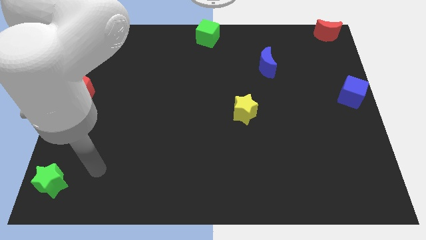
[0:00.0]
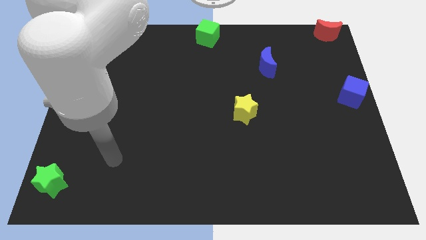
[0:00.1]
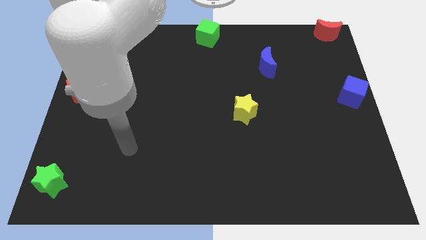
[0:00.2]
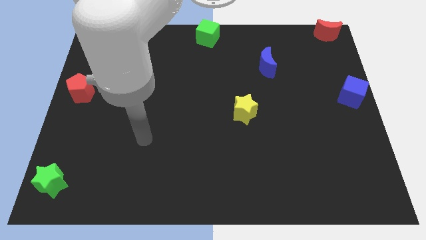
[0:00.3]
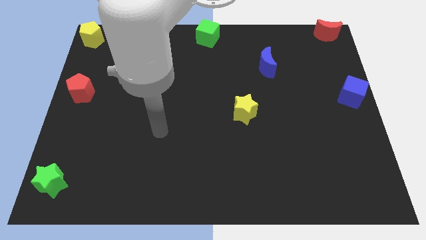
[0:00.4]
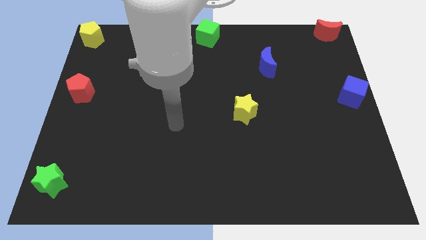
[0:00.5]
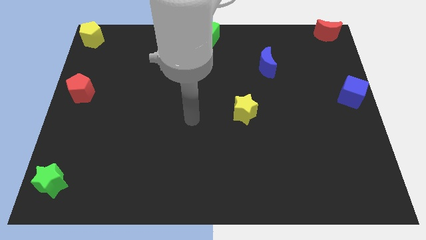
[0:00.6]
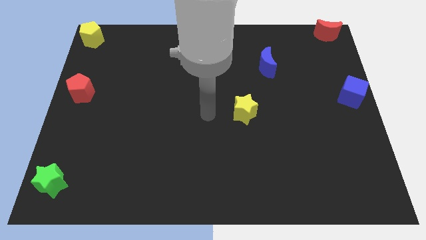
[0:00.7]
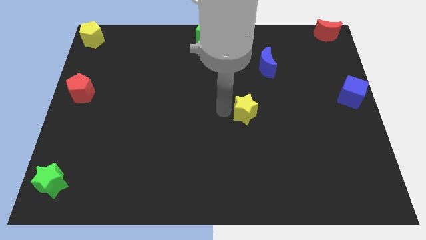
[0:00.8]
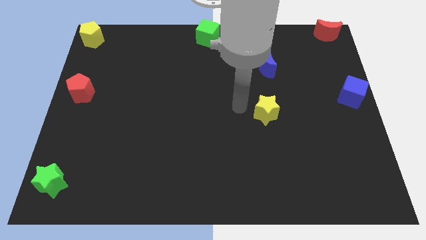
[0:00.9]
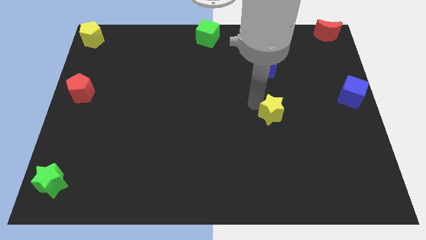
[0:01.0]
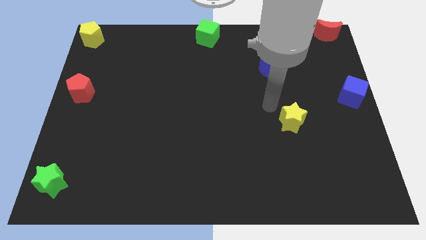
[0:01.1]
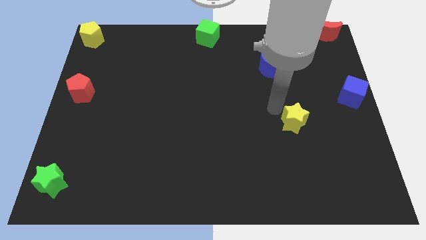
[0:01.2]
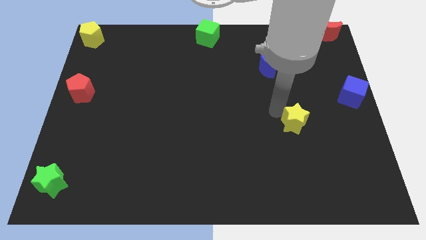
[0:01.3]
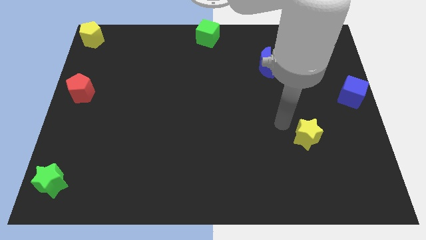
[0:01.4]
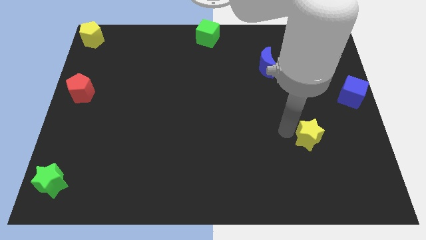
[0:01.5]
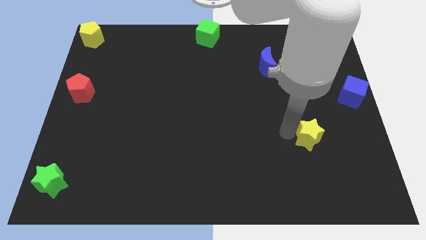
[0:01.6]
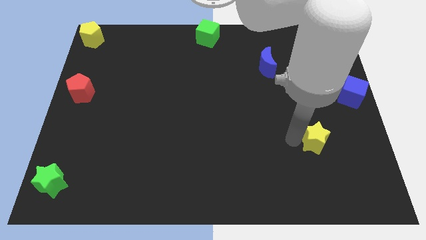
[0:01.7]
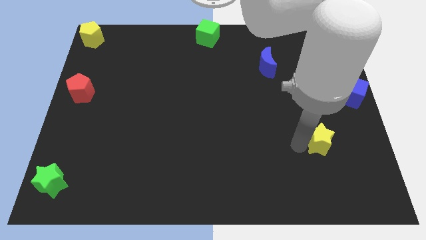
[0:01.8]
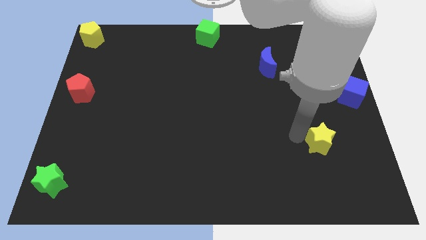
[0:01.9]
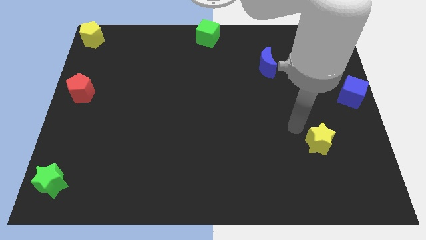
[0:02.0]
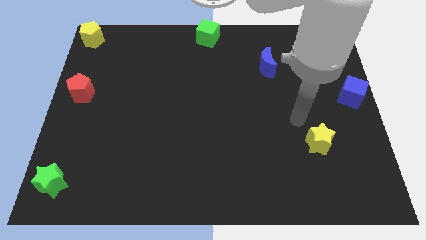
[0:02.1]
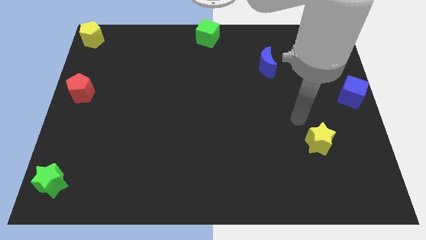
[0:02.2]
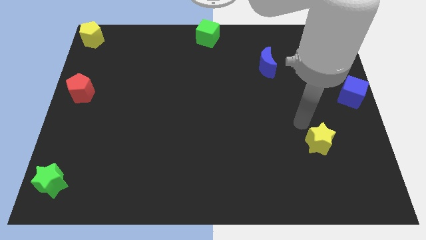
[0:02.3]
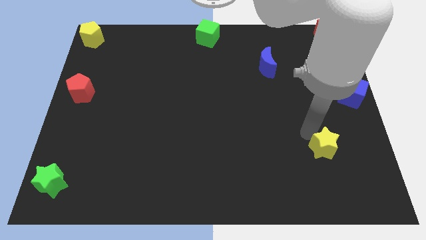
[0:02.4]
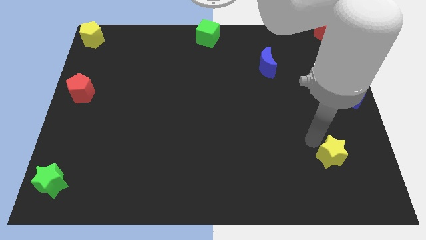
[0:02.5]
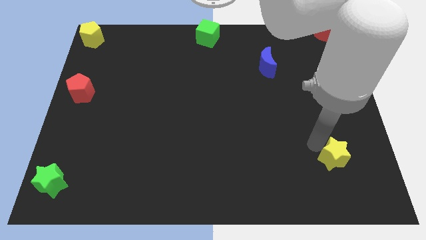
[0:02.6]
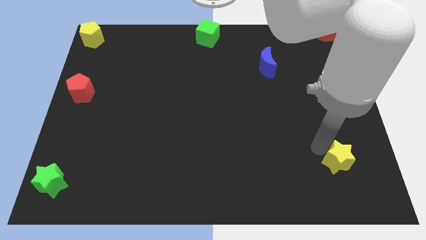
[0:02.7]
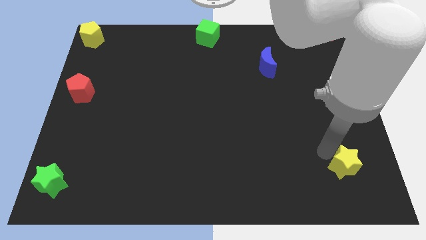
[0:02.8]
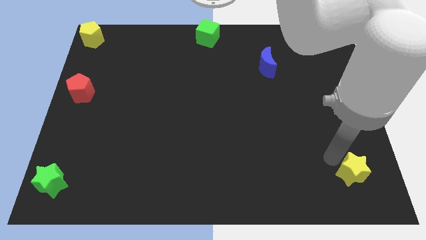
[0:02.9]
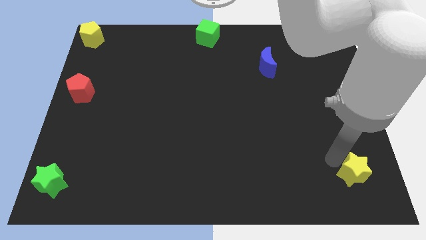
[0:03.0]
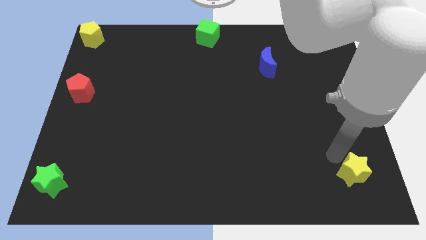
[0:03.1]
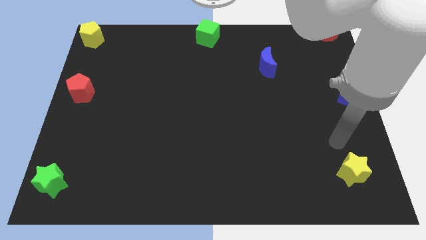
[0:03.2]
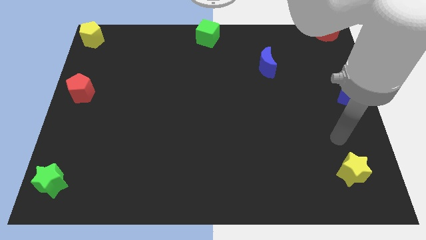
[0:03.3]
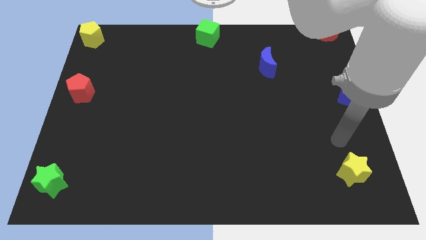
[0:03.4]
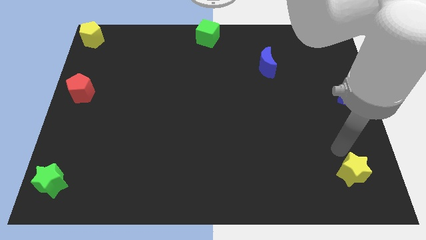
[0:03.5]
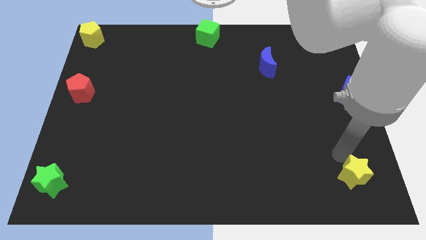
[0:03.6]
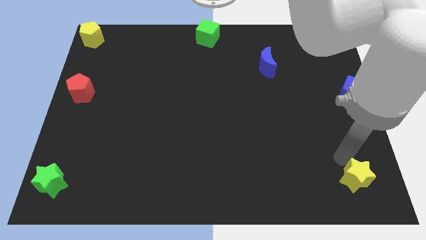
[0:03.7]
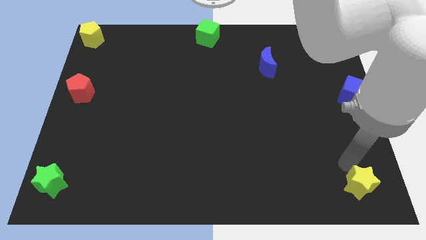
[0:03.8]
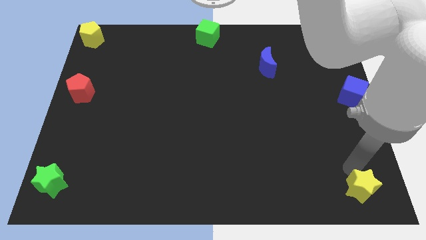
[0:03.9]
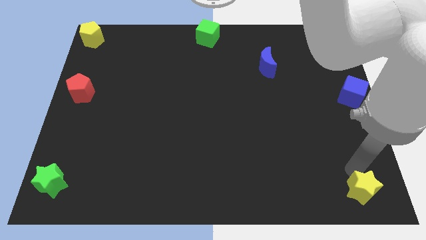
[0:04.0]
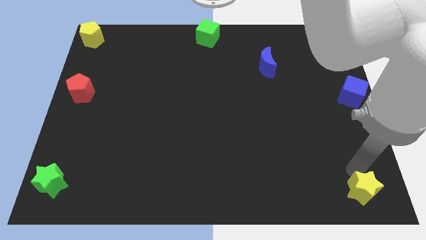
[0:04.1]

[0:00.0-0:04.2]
move the yellow star towards the bottom right corner of the board

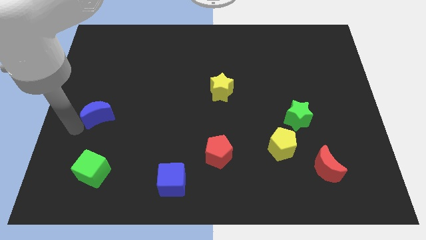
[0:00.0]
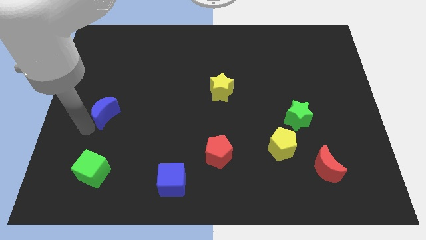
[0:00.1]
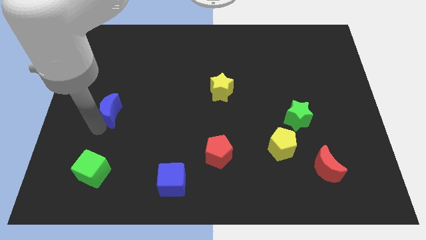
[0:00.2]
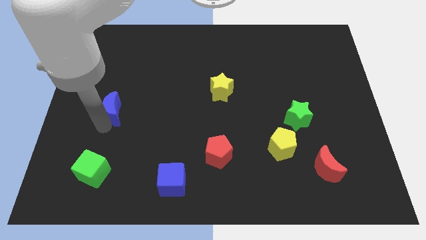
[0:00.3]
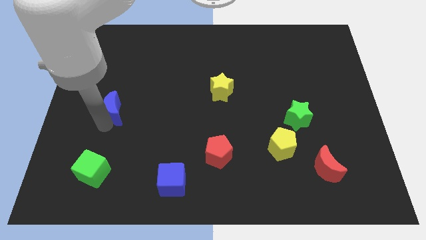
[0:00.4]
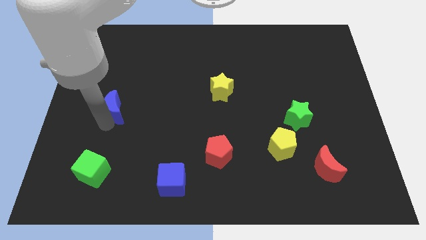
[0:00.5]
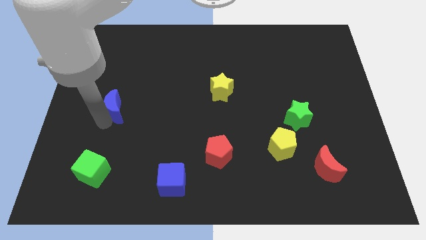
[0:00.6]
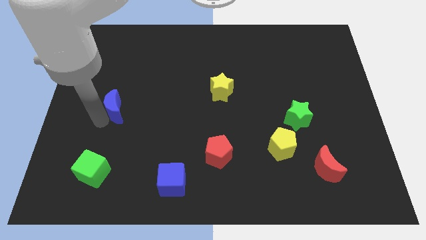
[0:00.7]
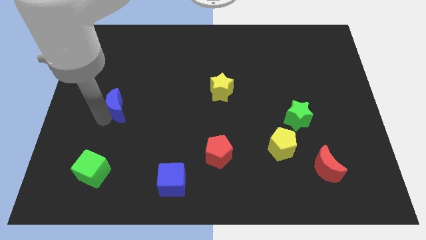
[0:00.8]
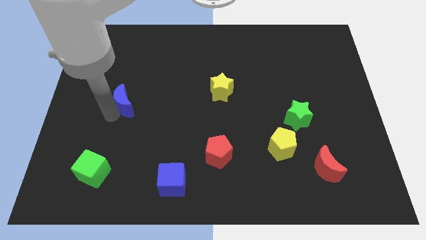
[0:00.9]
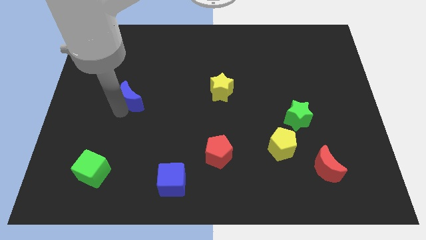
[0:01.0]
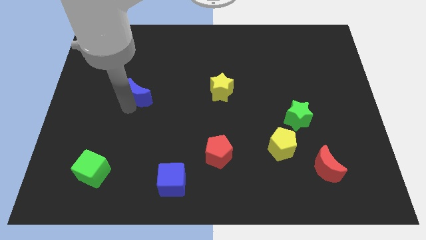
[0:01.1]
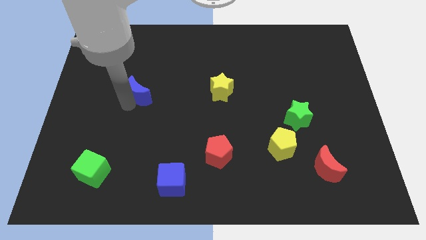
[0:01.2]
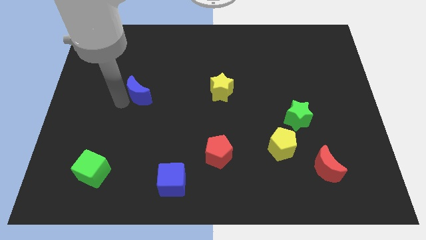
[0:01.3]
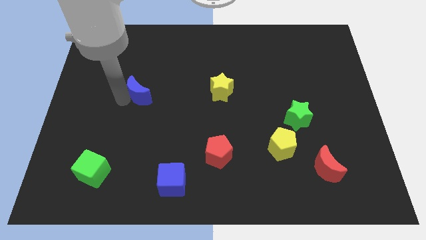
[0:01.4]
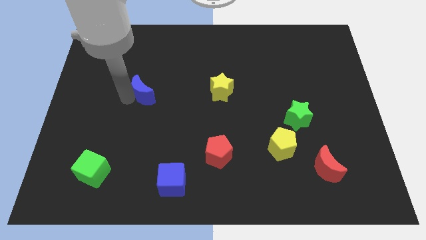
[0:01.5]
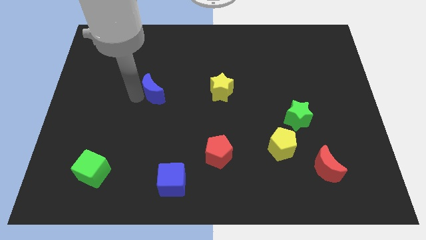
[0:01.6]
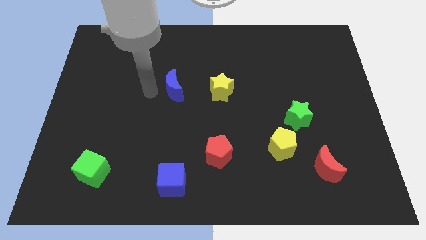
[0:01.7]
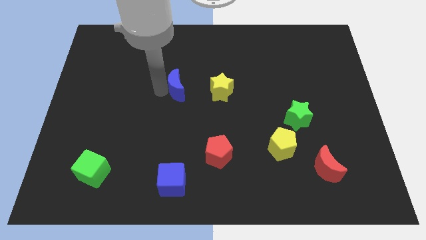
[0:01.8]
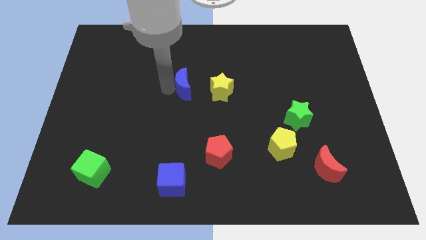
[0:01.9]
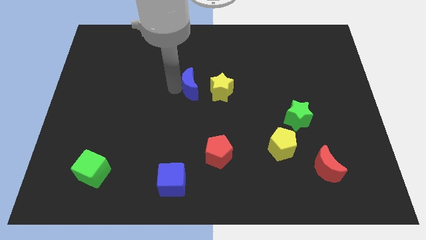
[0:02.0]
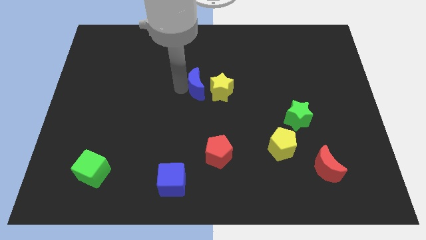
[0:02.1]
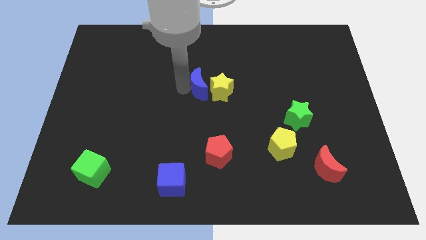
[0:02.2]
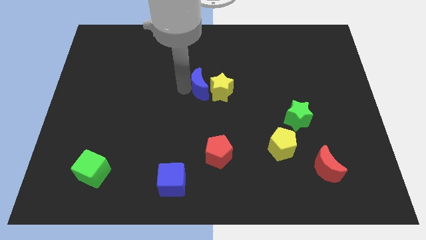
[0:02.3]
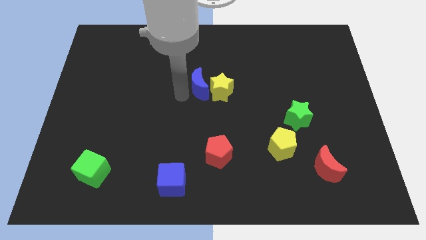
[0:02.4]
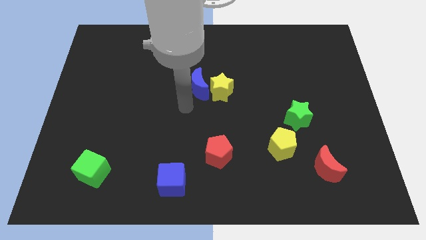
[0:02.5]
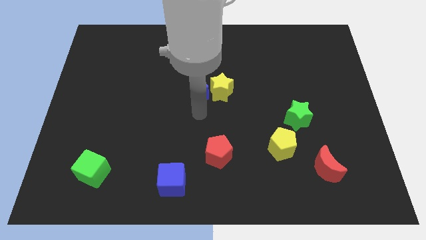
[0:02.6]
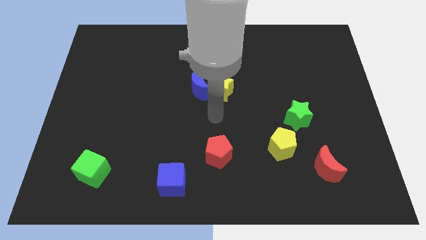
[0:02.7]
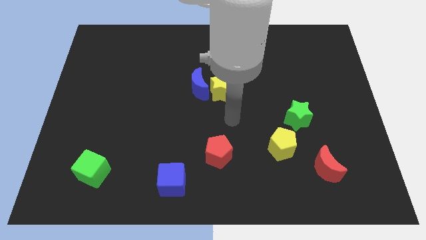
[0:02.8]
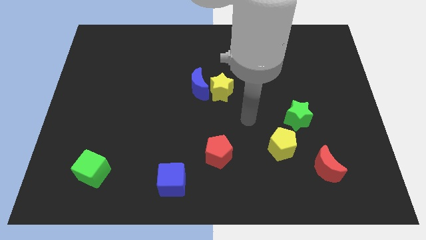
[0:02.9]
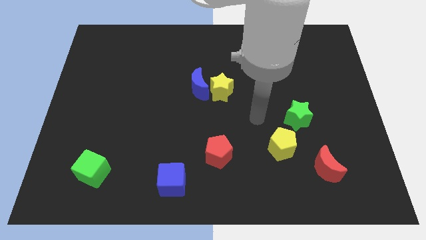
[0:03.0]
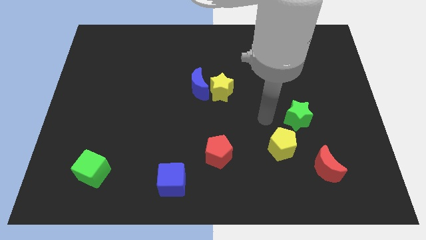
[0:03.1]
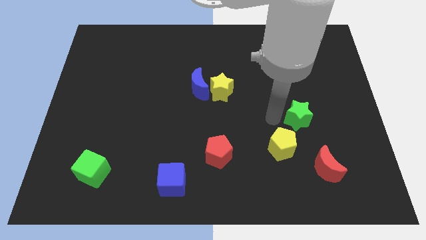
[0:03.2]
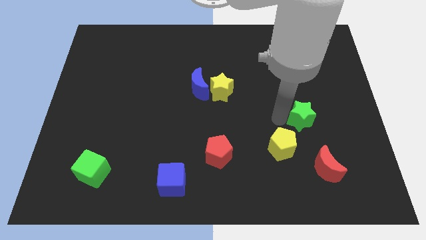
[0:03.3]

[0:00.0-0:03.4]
push the blue moon left to the yellow star

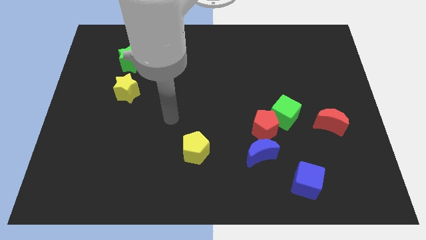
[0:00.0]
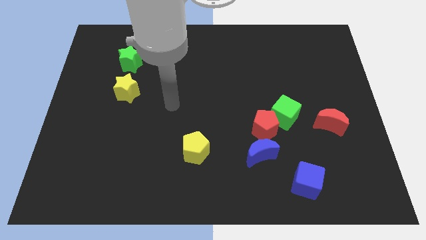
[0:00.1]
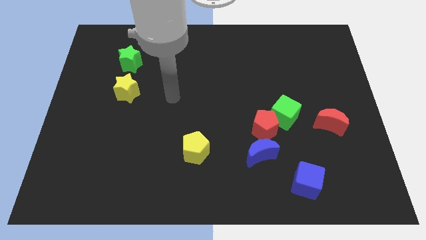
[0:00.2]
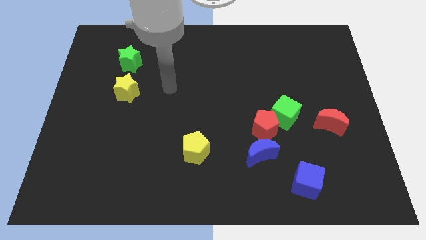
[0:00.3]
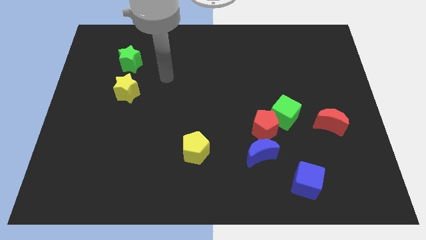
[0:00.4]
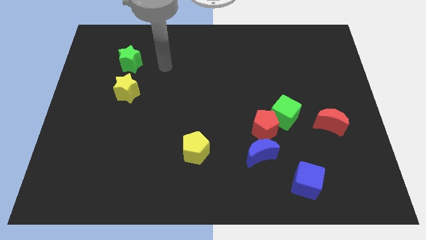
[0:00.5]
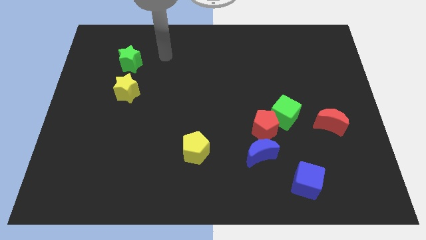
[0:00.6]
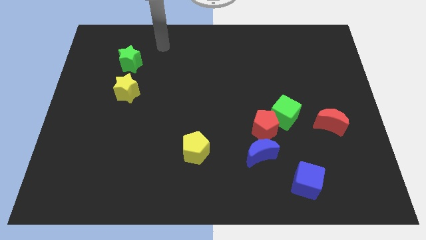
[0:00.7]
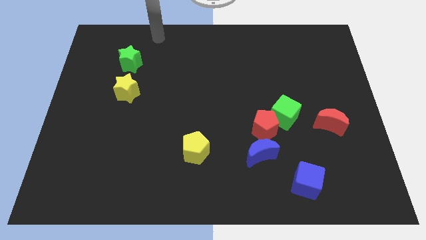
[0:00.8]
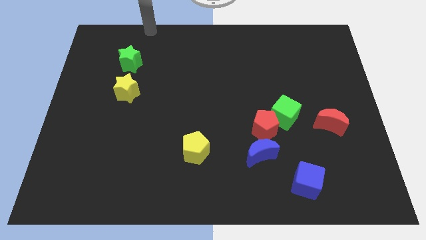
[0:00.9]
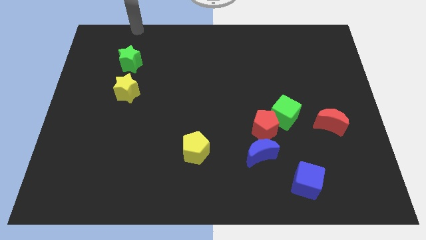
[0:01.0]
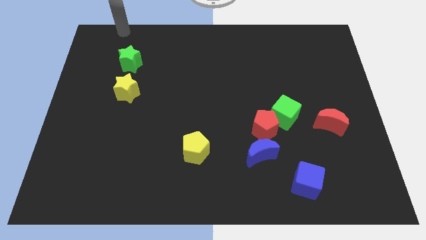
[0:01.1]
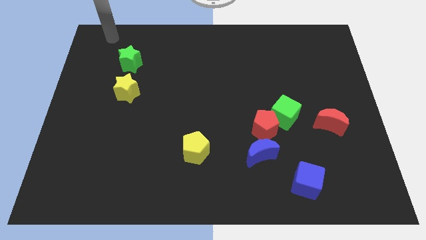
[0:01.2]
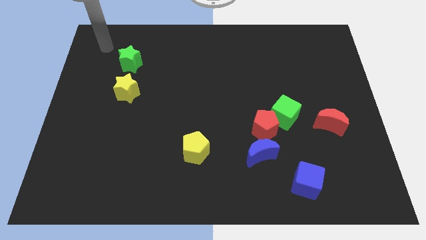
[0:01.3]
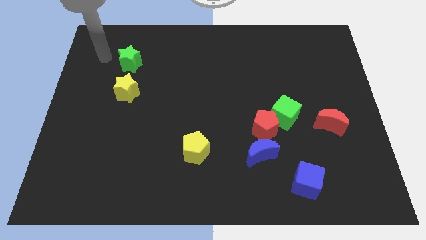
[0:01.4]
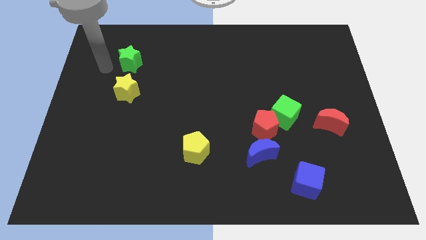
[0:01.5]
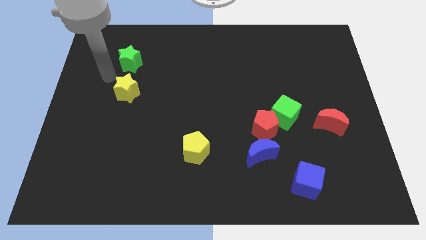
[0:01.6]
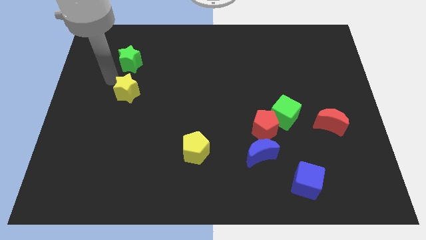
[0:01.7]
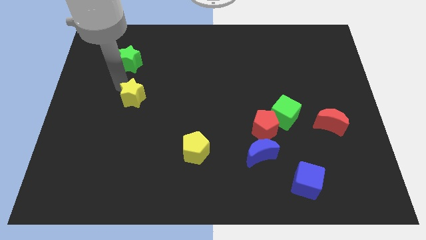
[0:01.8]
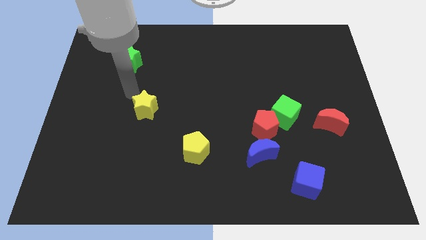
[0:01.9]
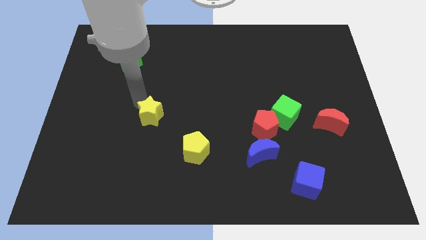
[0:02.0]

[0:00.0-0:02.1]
slide the yellow star diagonally bottom right to the green star
